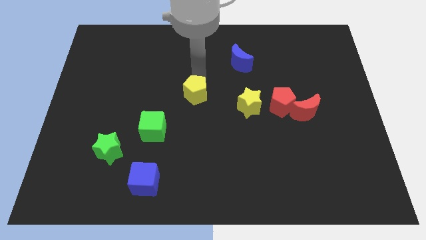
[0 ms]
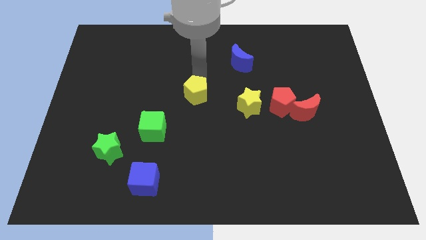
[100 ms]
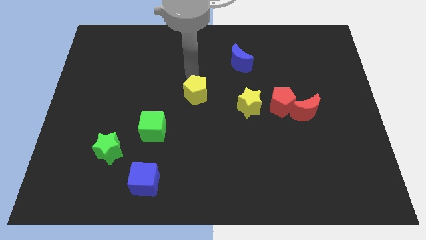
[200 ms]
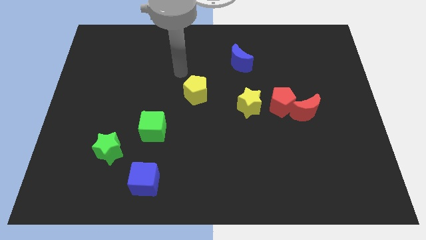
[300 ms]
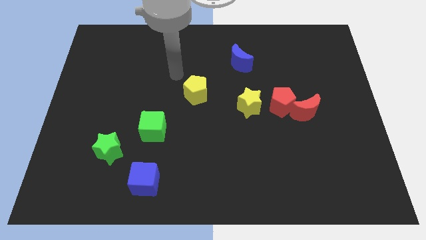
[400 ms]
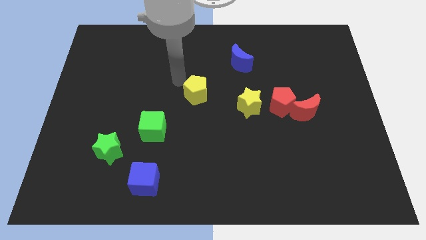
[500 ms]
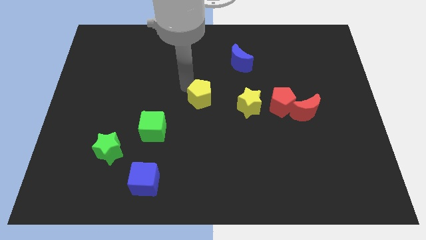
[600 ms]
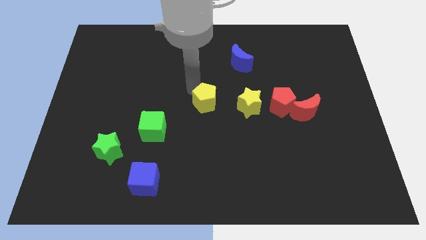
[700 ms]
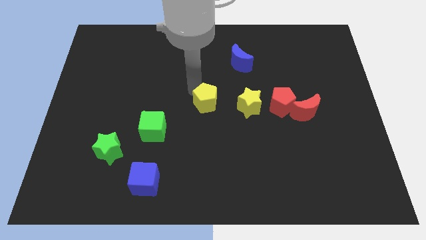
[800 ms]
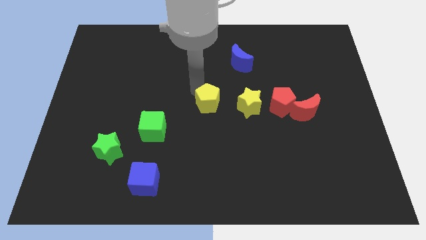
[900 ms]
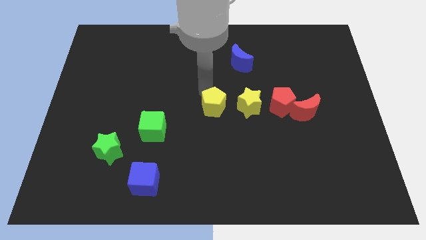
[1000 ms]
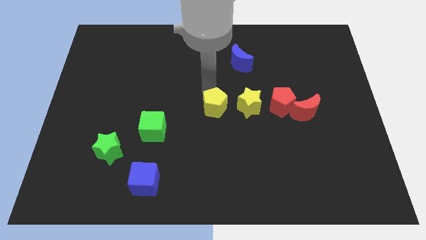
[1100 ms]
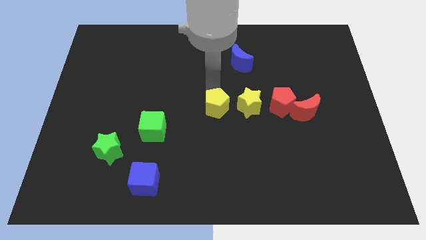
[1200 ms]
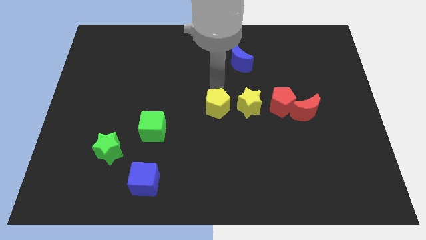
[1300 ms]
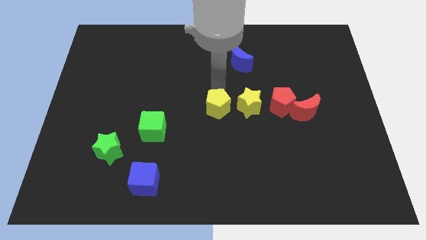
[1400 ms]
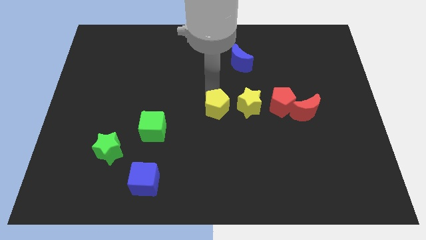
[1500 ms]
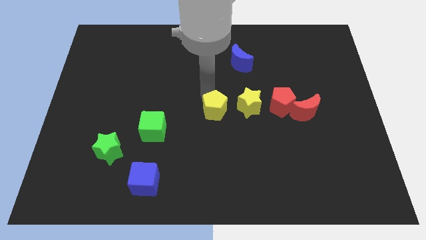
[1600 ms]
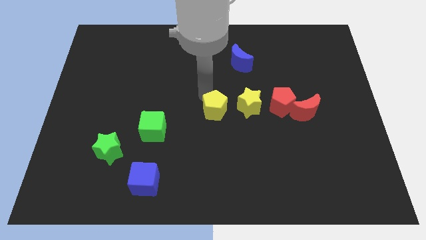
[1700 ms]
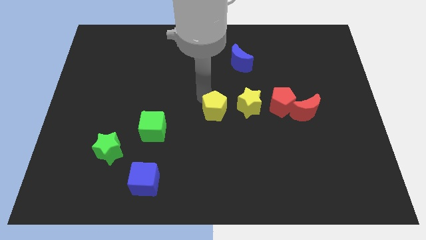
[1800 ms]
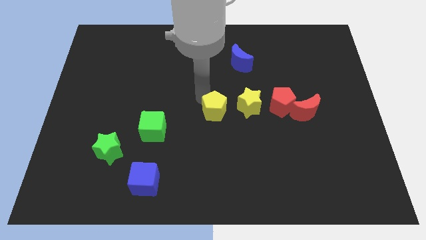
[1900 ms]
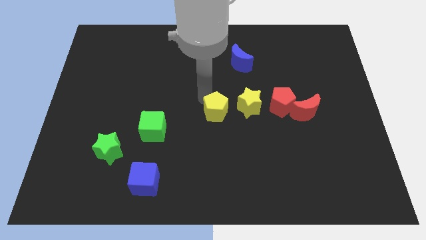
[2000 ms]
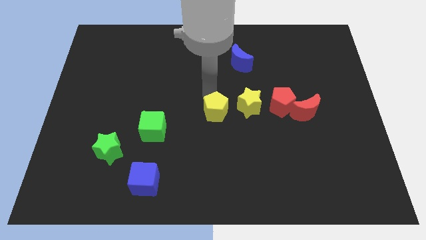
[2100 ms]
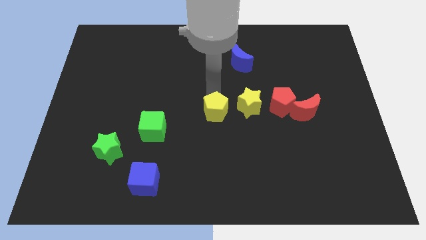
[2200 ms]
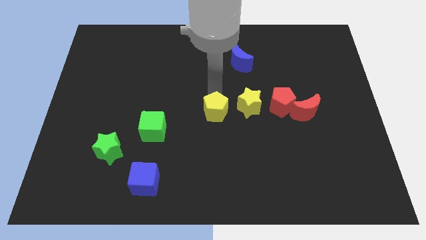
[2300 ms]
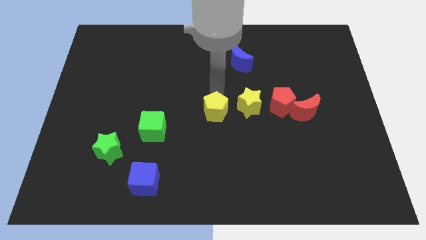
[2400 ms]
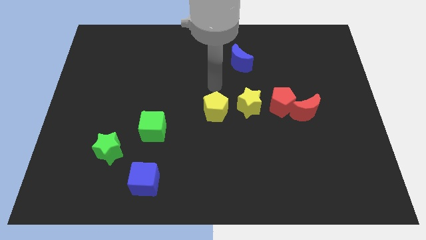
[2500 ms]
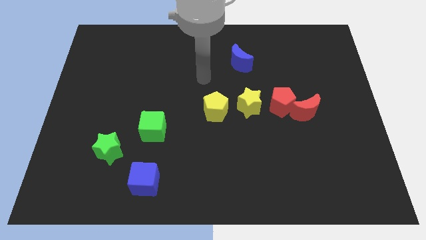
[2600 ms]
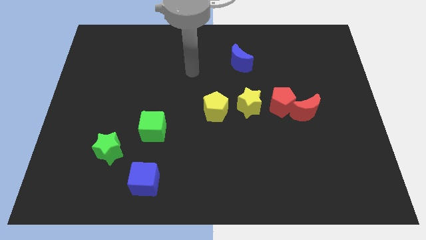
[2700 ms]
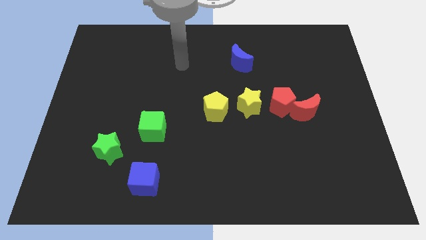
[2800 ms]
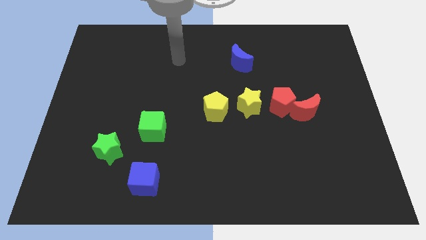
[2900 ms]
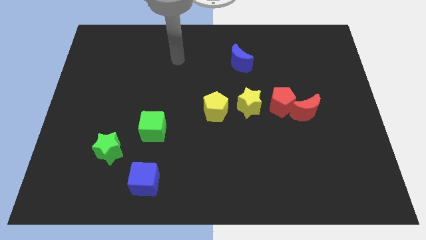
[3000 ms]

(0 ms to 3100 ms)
push yellow pentagon towards the left side of the yellow star

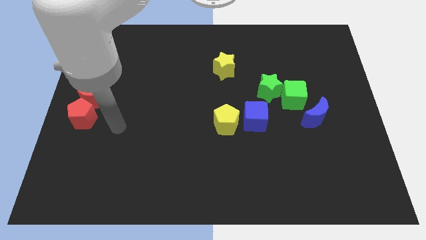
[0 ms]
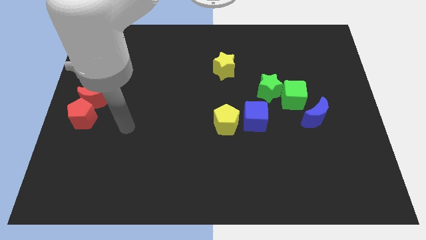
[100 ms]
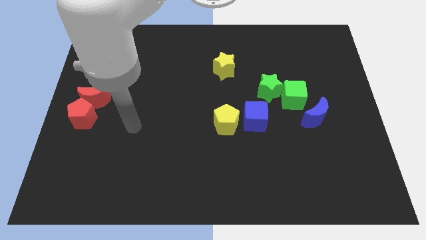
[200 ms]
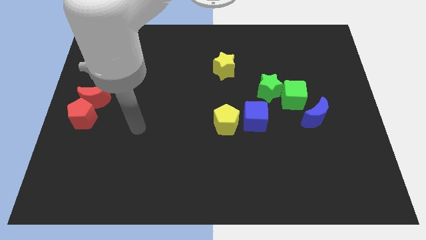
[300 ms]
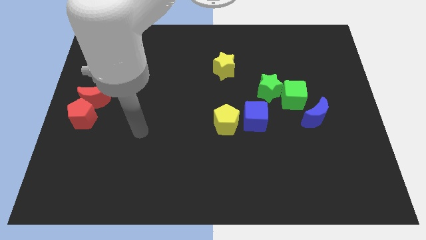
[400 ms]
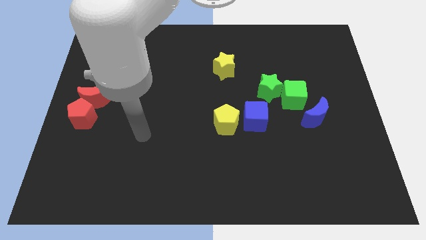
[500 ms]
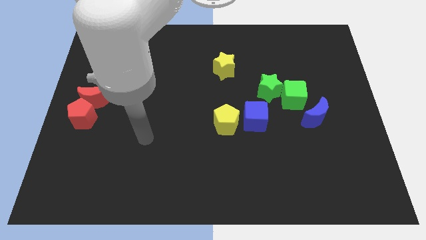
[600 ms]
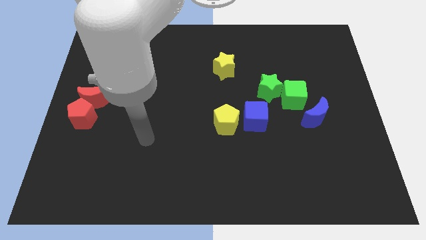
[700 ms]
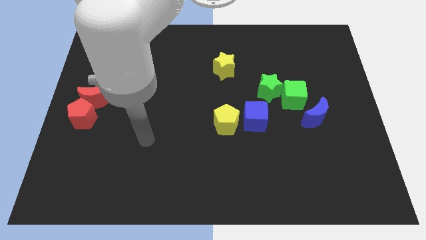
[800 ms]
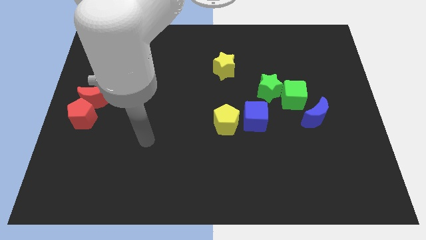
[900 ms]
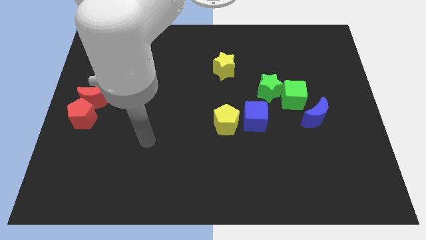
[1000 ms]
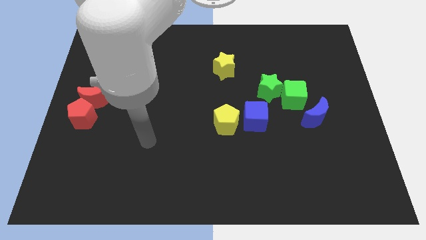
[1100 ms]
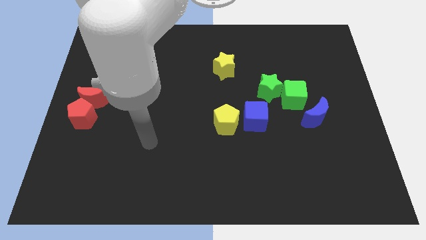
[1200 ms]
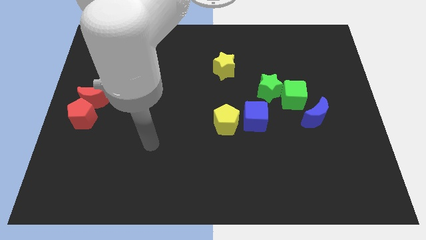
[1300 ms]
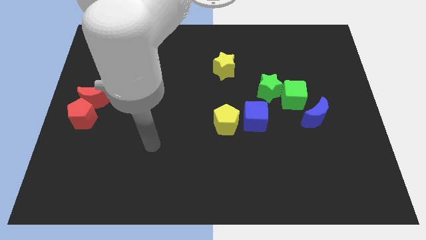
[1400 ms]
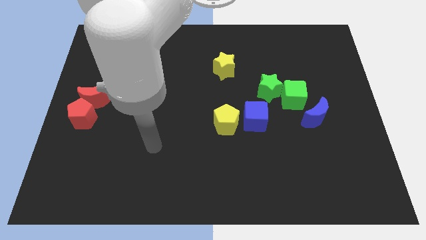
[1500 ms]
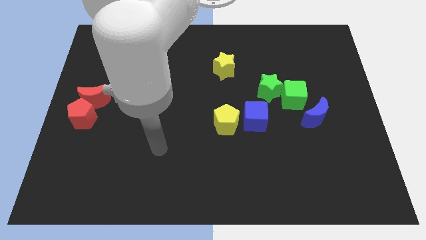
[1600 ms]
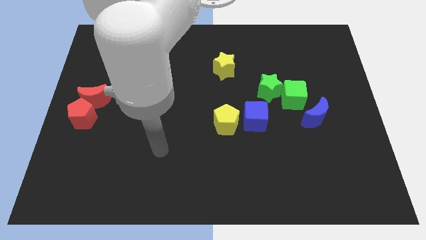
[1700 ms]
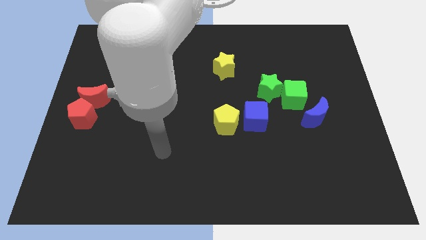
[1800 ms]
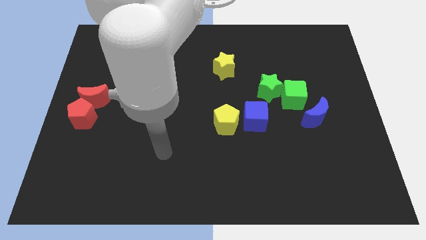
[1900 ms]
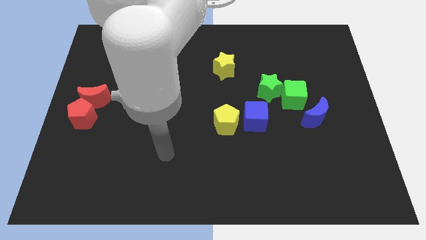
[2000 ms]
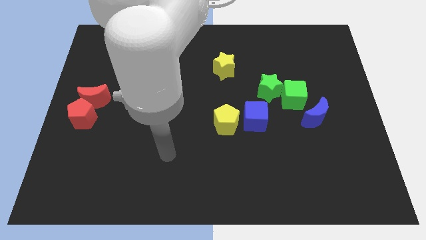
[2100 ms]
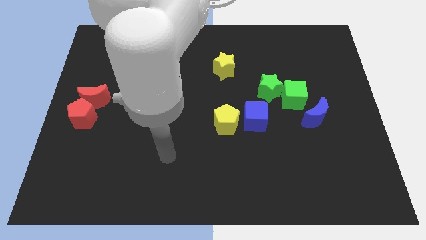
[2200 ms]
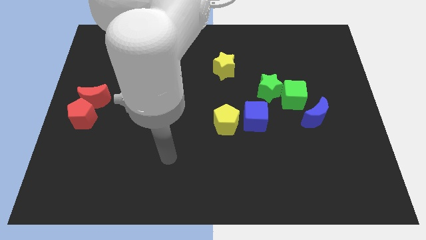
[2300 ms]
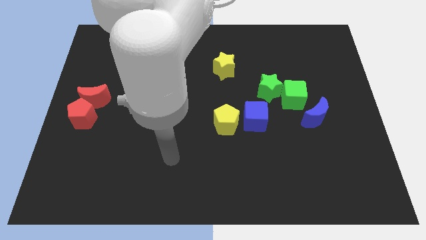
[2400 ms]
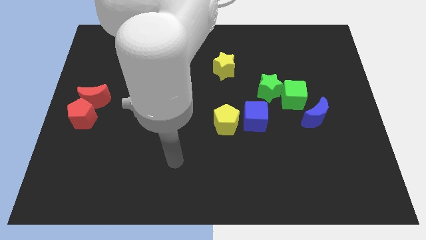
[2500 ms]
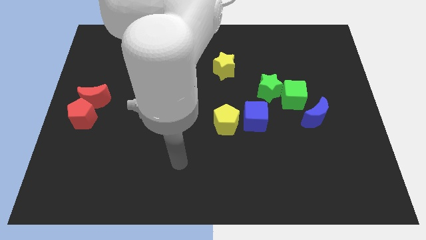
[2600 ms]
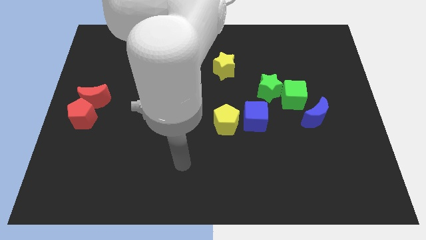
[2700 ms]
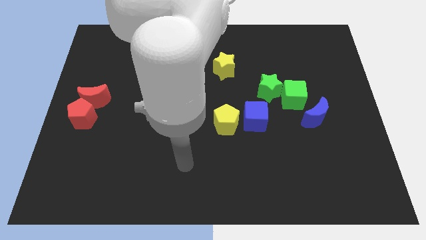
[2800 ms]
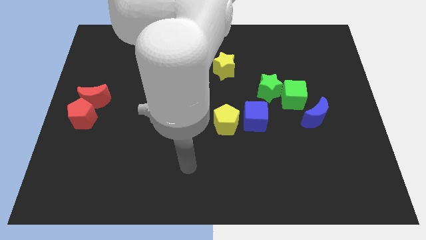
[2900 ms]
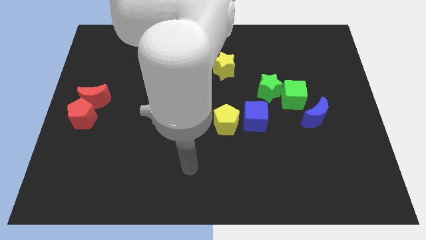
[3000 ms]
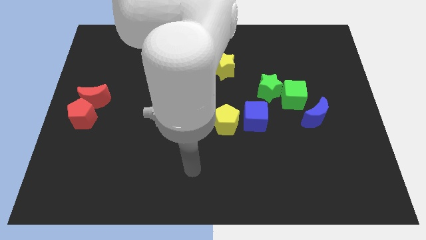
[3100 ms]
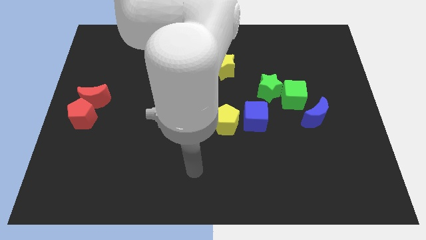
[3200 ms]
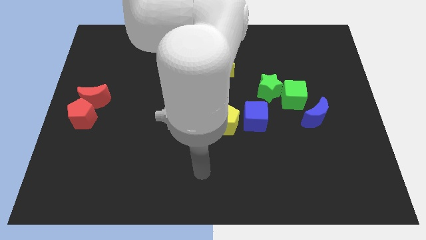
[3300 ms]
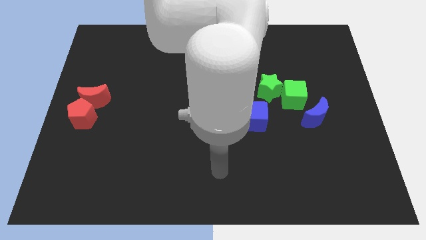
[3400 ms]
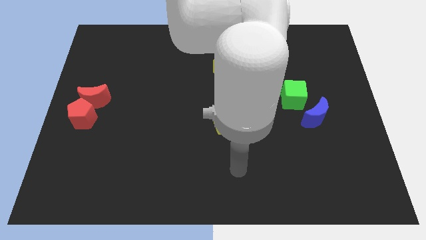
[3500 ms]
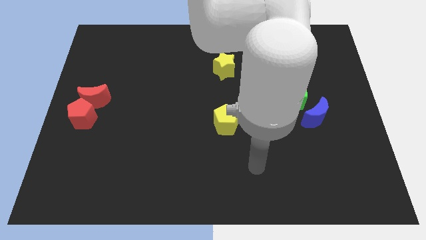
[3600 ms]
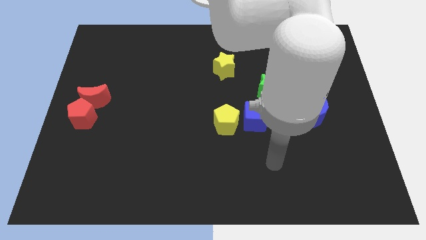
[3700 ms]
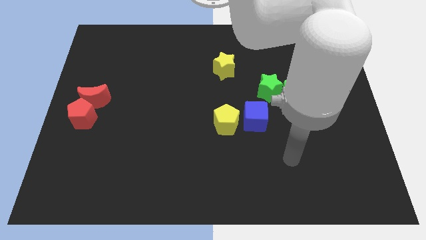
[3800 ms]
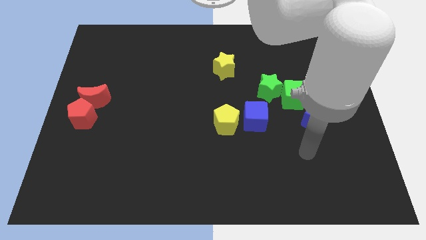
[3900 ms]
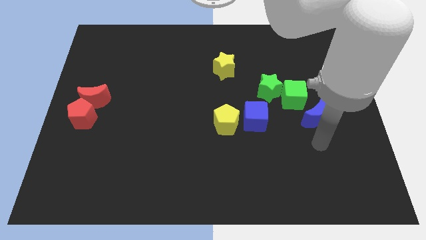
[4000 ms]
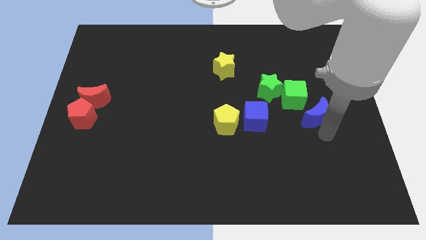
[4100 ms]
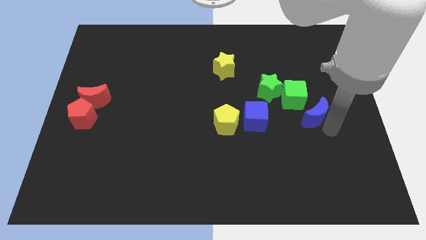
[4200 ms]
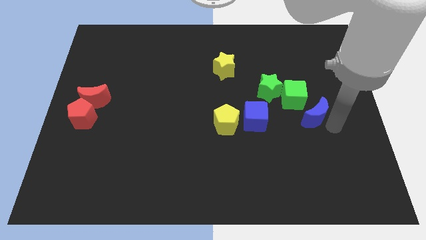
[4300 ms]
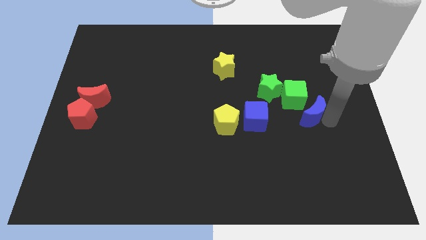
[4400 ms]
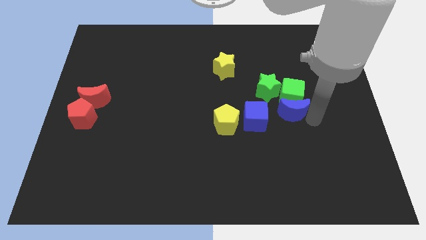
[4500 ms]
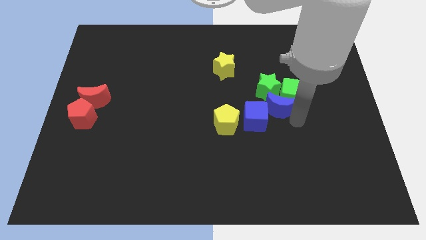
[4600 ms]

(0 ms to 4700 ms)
push the blue crescent below the green cube

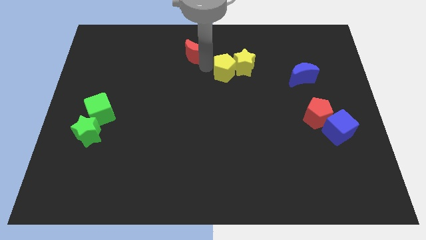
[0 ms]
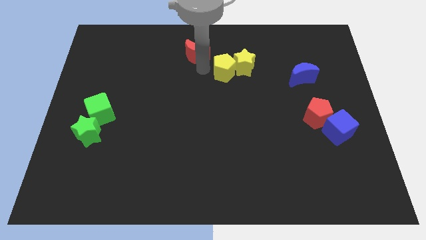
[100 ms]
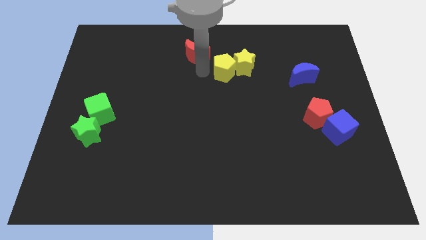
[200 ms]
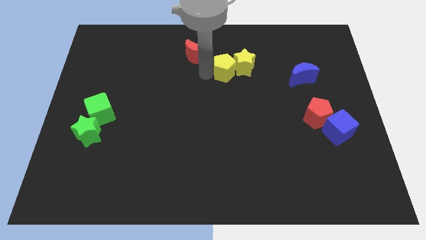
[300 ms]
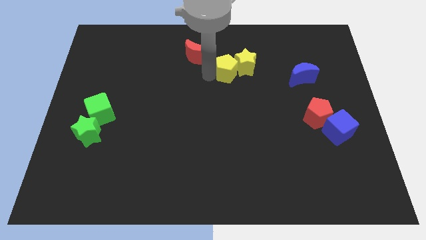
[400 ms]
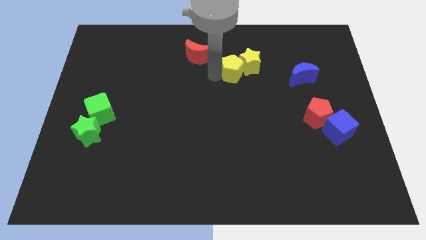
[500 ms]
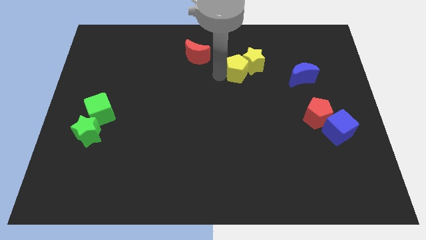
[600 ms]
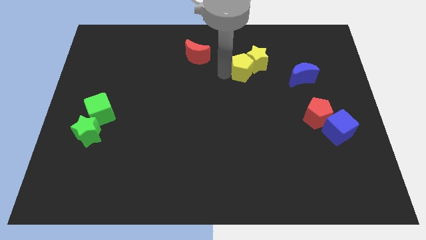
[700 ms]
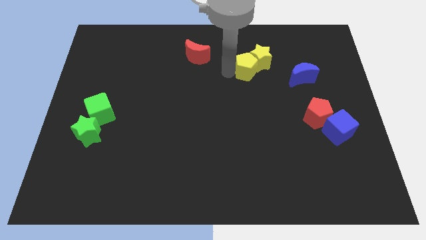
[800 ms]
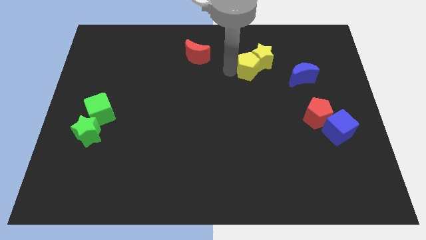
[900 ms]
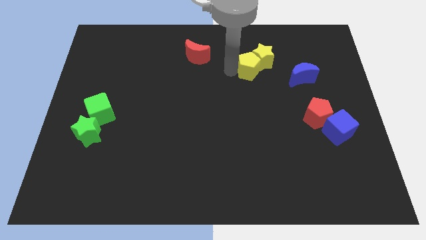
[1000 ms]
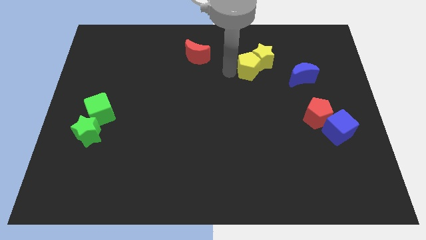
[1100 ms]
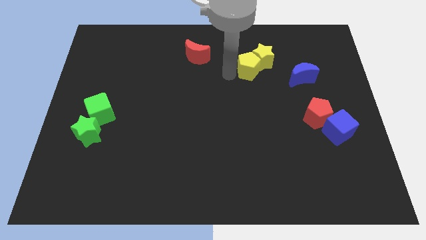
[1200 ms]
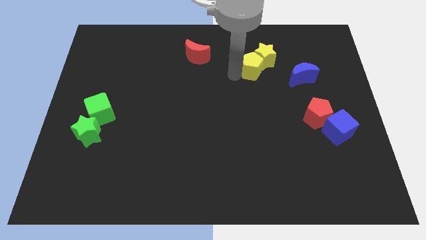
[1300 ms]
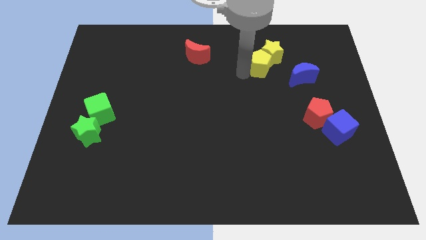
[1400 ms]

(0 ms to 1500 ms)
drag the yellow star along with the yellow pentagon
